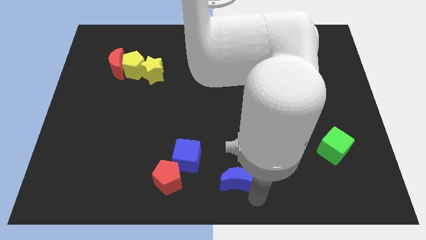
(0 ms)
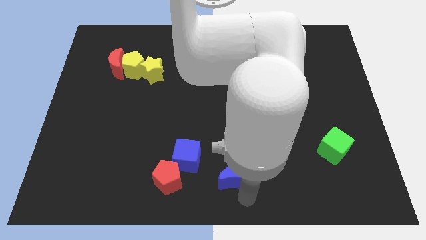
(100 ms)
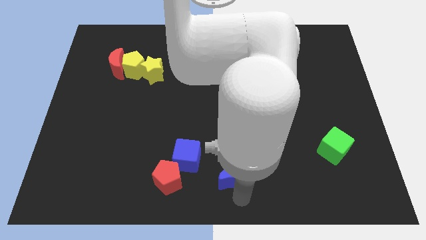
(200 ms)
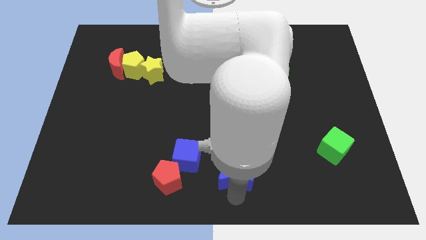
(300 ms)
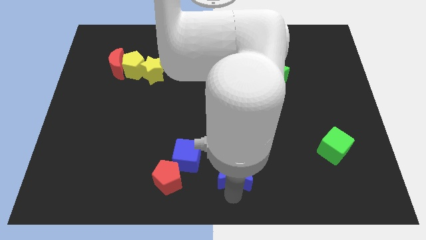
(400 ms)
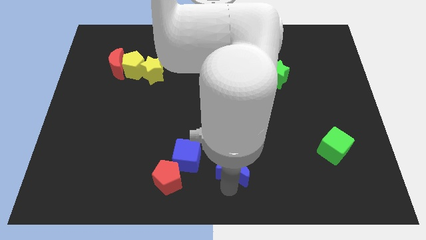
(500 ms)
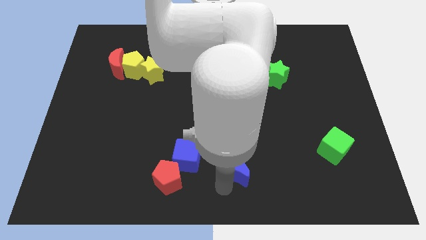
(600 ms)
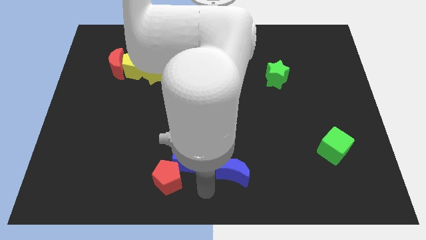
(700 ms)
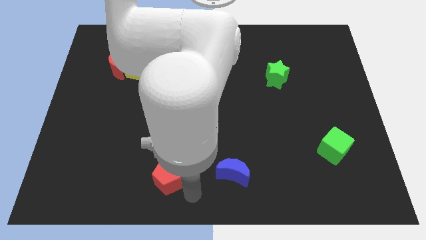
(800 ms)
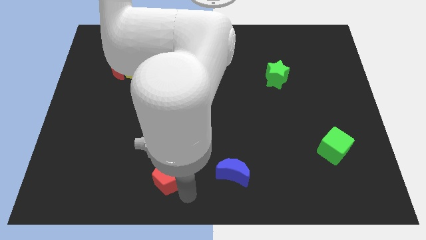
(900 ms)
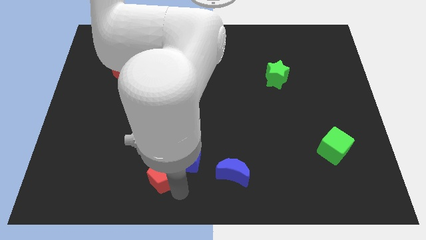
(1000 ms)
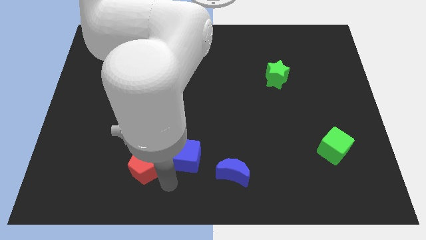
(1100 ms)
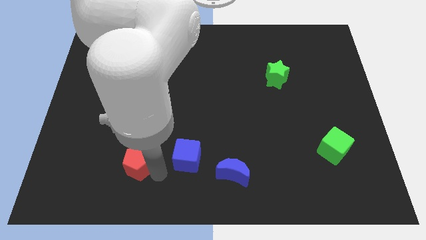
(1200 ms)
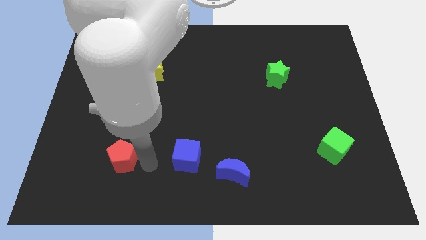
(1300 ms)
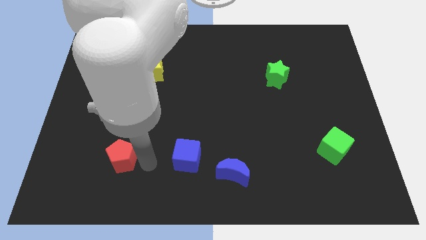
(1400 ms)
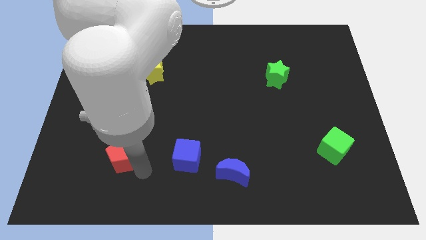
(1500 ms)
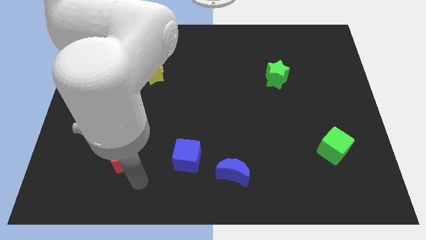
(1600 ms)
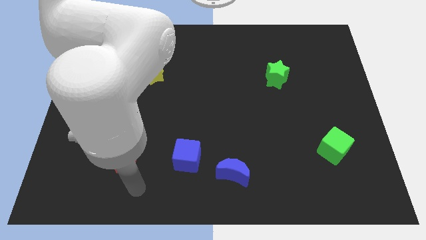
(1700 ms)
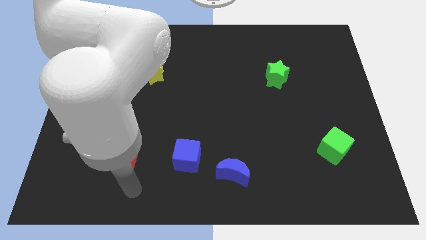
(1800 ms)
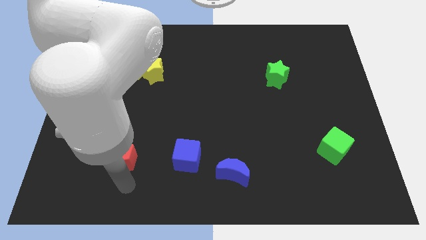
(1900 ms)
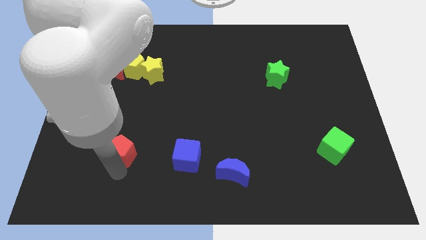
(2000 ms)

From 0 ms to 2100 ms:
move the blue crescent and red pentagon with hand

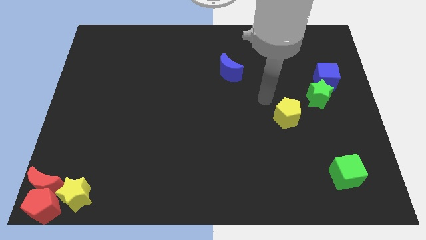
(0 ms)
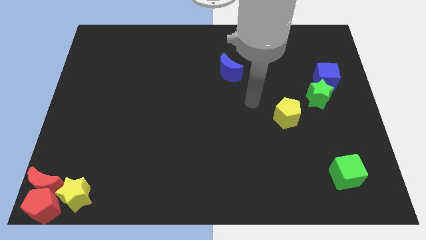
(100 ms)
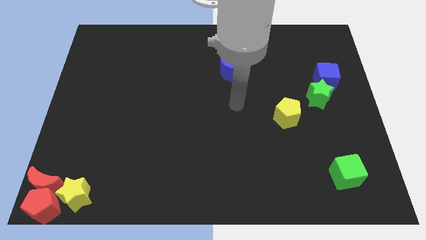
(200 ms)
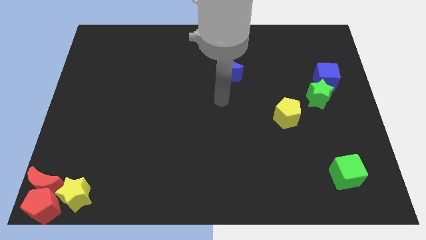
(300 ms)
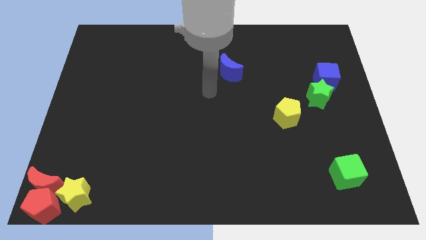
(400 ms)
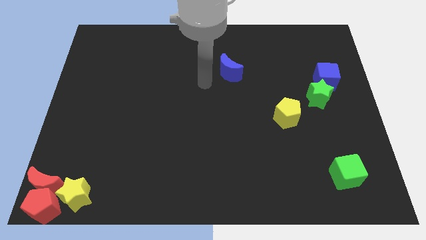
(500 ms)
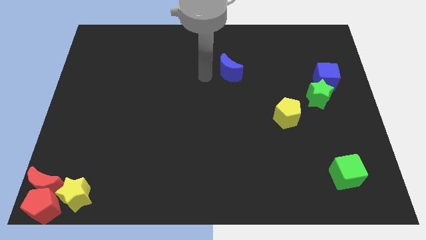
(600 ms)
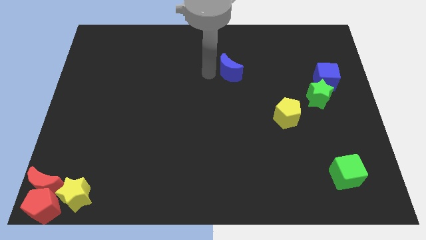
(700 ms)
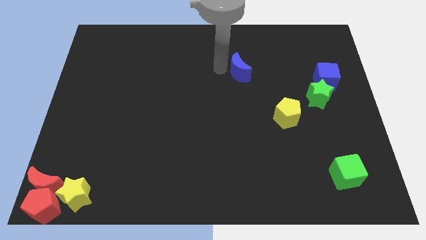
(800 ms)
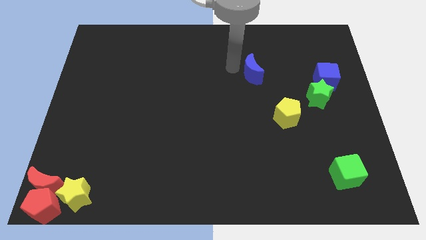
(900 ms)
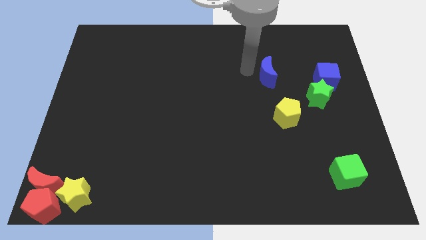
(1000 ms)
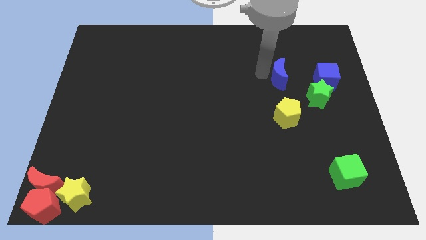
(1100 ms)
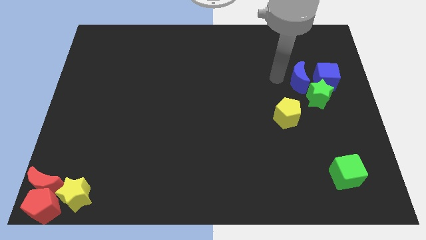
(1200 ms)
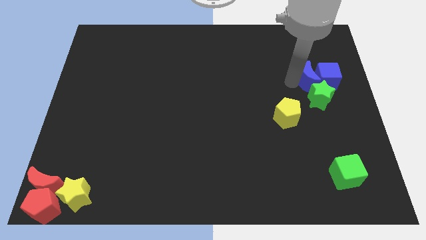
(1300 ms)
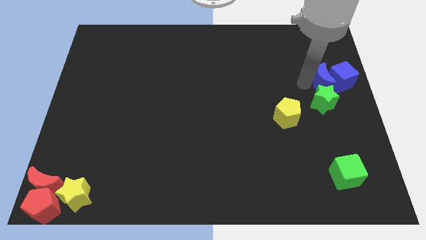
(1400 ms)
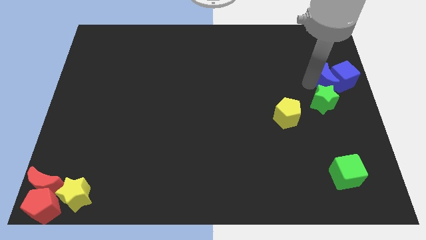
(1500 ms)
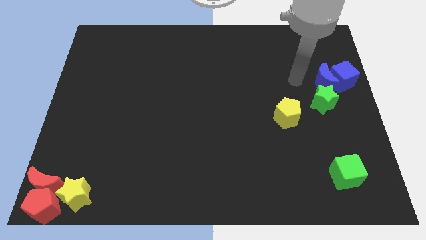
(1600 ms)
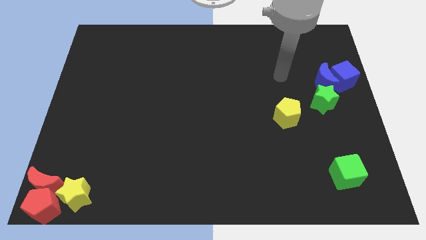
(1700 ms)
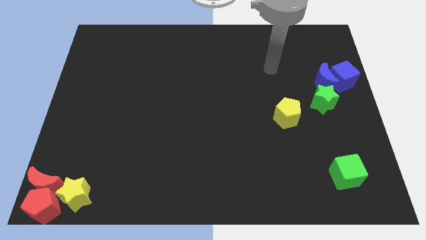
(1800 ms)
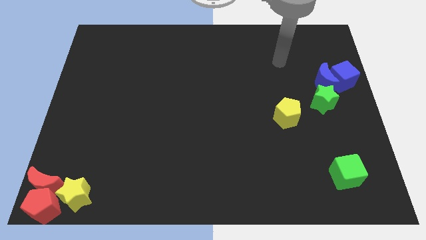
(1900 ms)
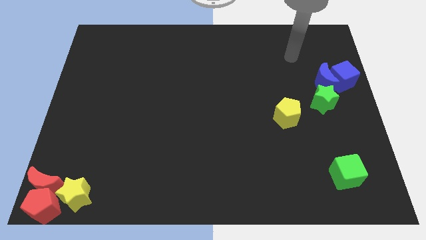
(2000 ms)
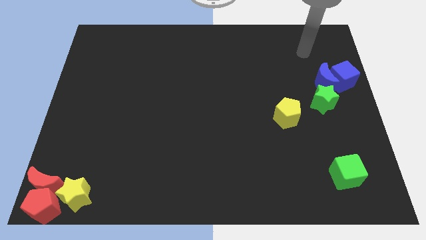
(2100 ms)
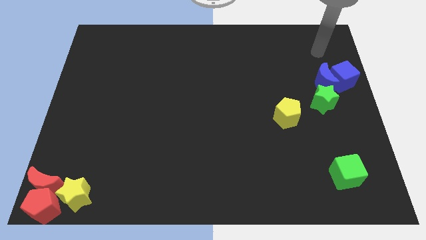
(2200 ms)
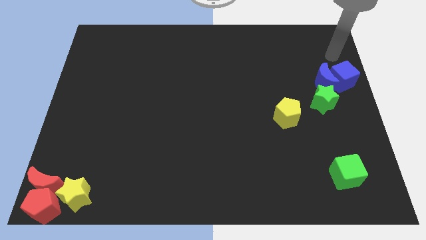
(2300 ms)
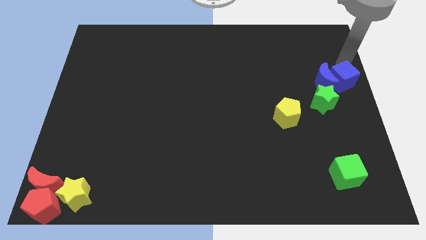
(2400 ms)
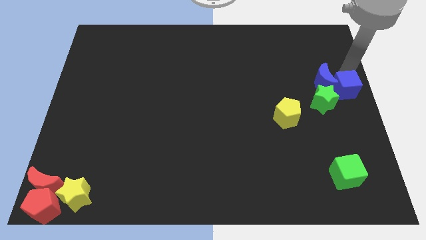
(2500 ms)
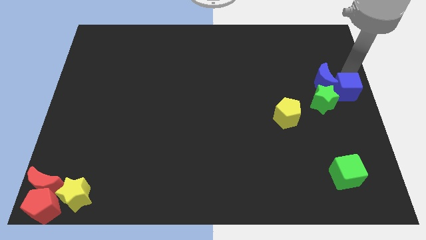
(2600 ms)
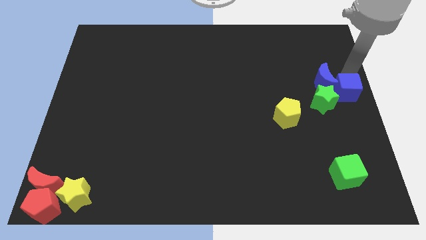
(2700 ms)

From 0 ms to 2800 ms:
push blue cube slightly down

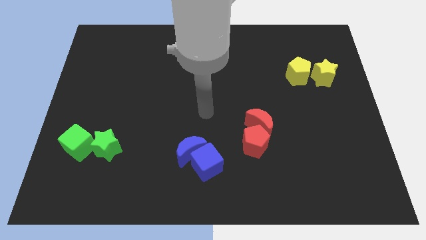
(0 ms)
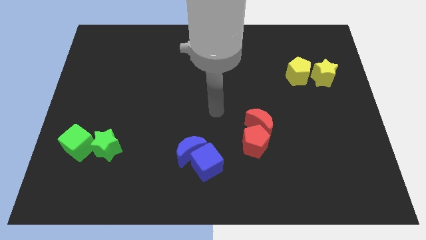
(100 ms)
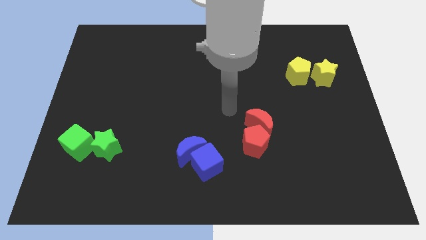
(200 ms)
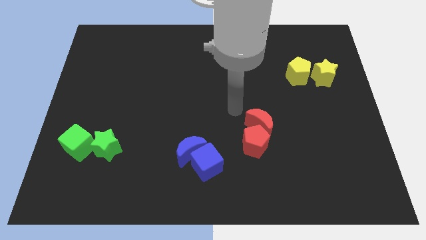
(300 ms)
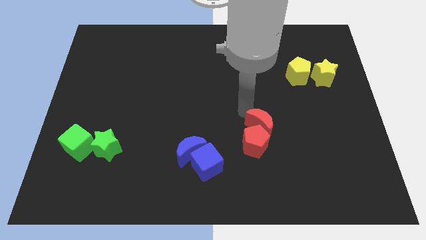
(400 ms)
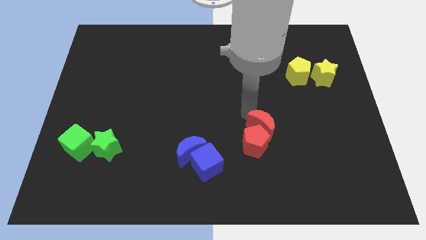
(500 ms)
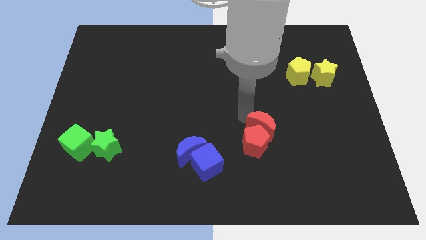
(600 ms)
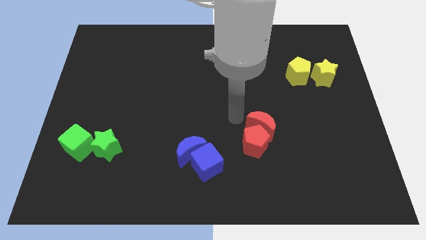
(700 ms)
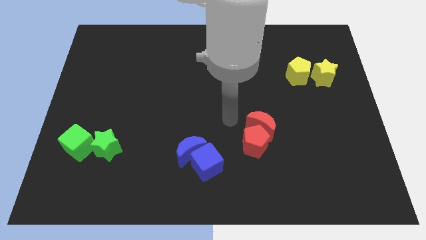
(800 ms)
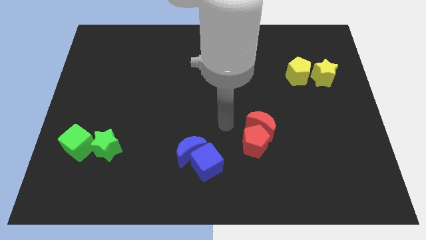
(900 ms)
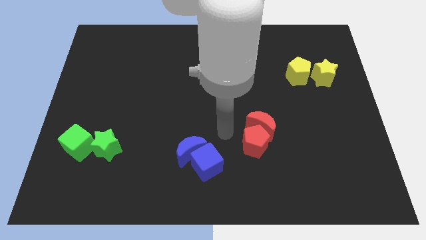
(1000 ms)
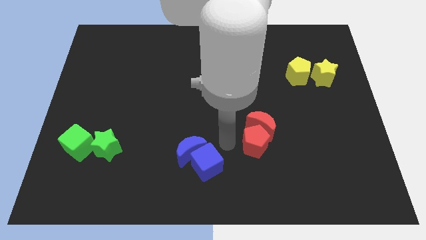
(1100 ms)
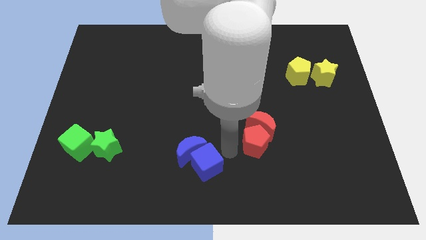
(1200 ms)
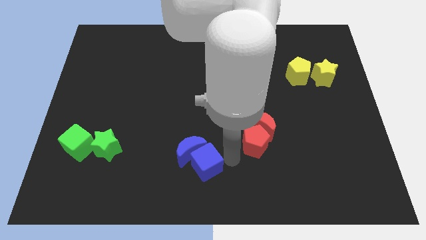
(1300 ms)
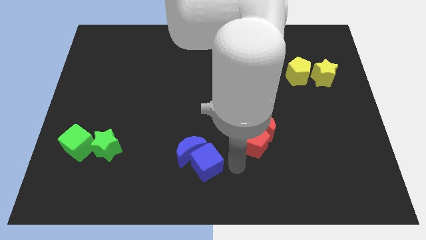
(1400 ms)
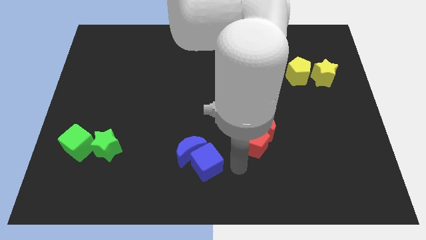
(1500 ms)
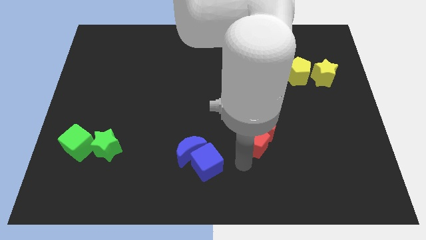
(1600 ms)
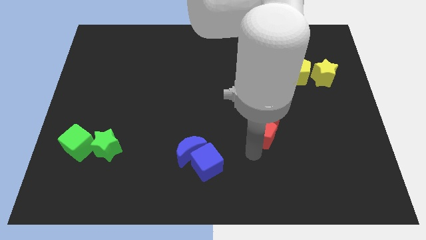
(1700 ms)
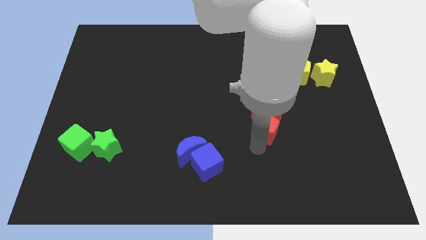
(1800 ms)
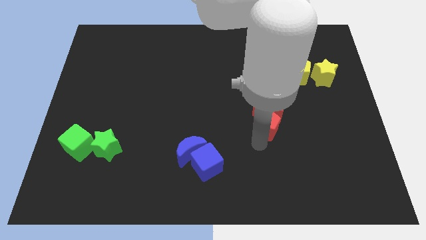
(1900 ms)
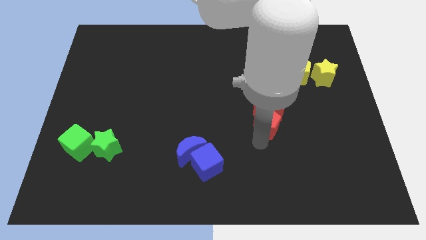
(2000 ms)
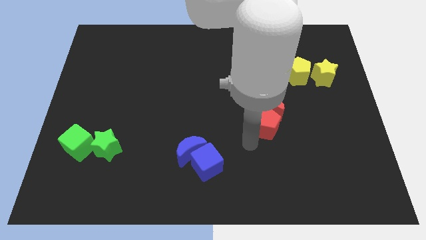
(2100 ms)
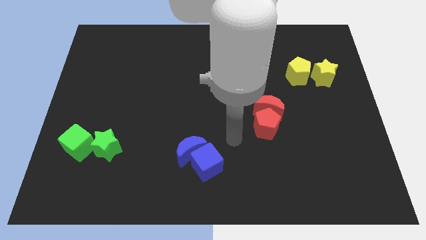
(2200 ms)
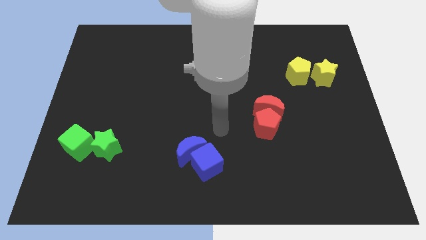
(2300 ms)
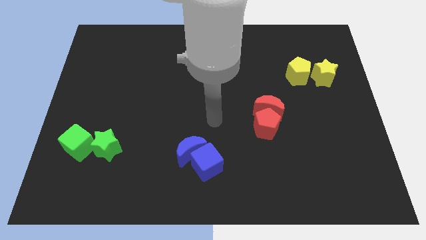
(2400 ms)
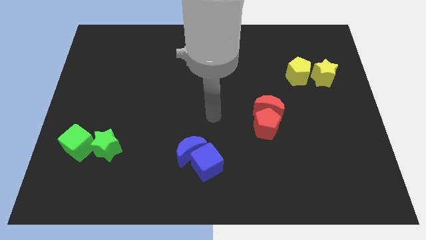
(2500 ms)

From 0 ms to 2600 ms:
push the red crescent with the red pentagon slightly to the center of the board

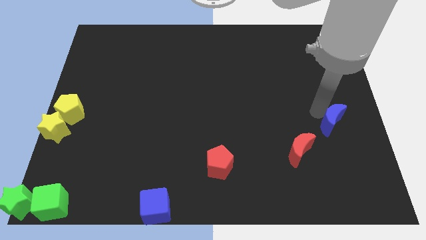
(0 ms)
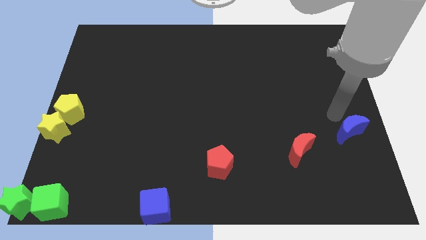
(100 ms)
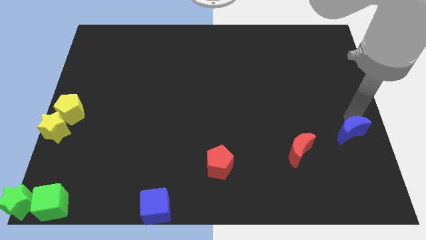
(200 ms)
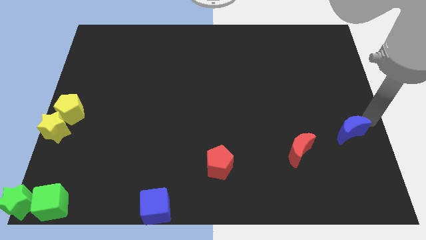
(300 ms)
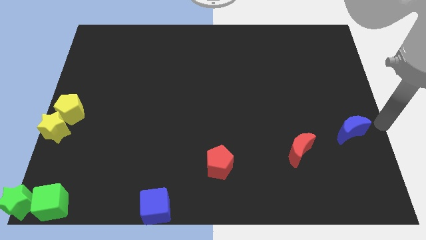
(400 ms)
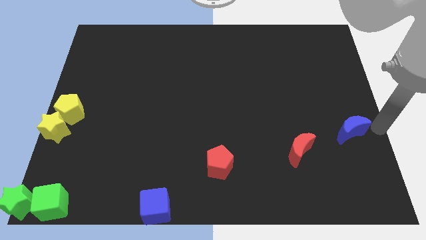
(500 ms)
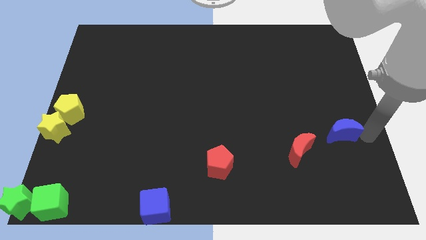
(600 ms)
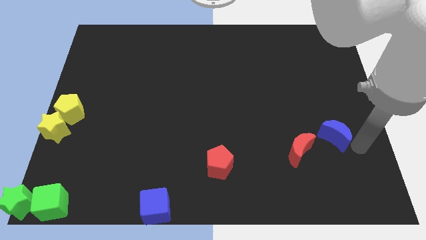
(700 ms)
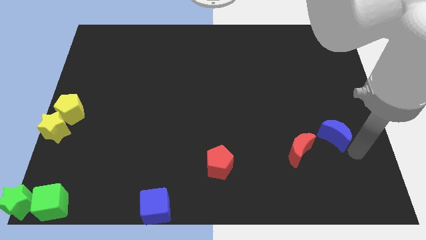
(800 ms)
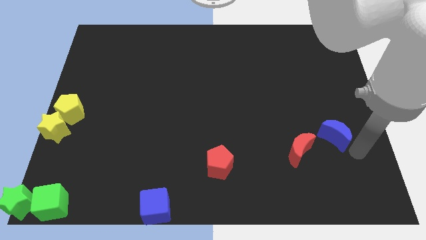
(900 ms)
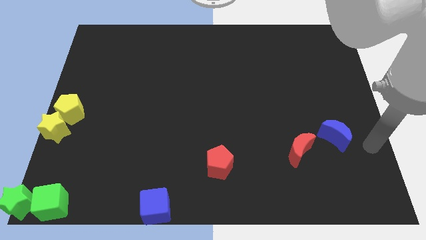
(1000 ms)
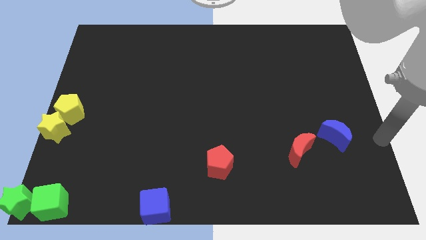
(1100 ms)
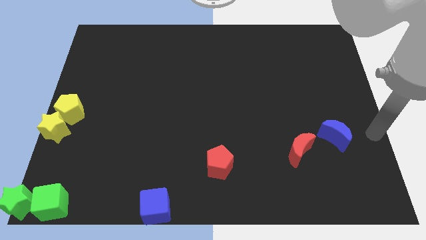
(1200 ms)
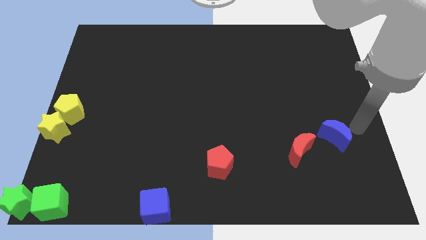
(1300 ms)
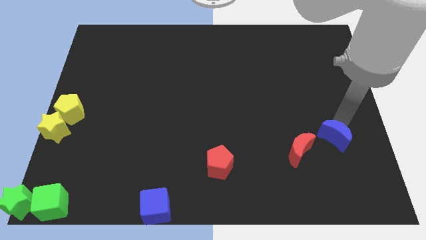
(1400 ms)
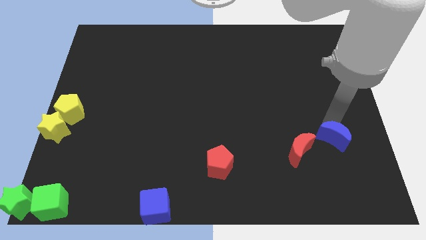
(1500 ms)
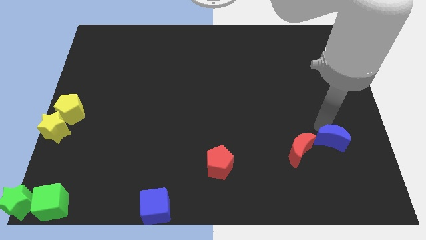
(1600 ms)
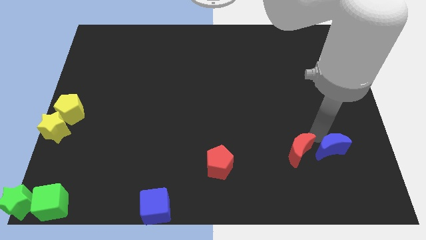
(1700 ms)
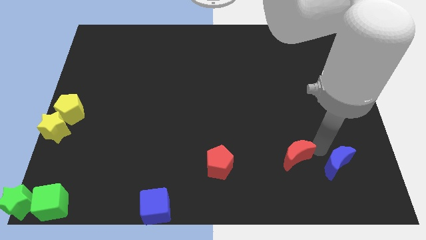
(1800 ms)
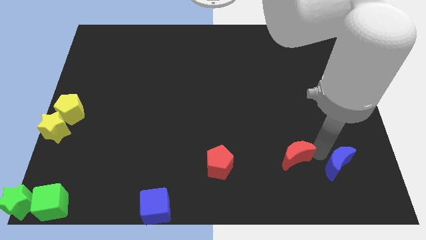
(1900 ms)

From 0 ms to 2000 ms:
move the blue crescent to the right side of the red crescent
